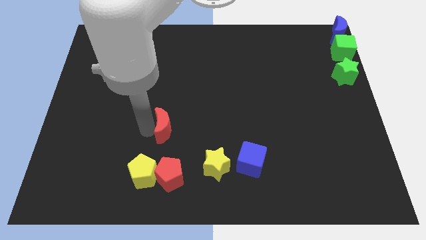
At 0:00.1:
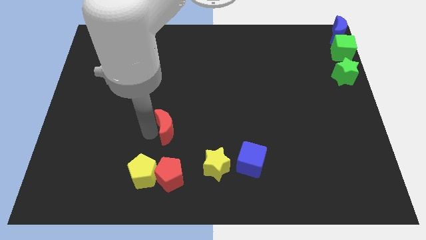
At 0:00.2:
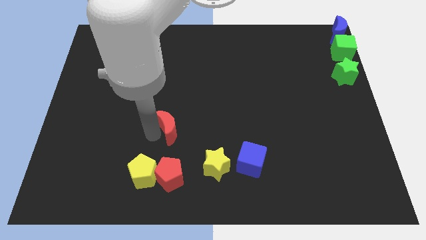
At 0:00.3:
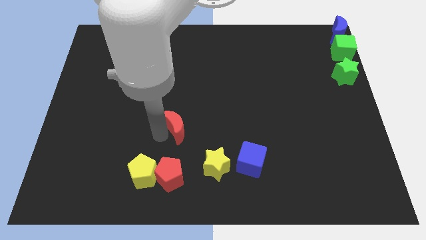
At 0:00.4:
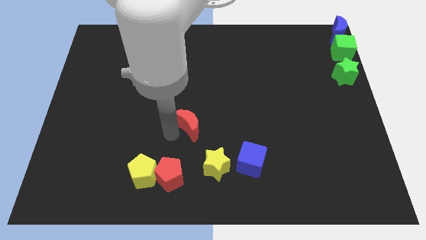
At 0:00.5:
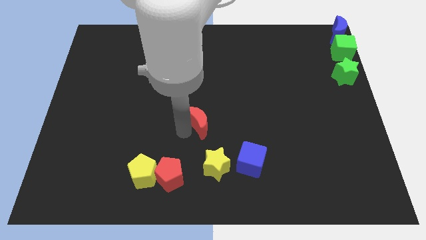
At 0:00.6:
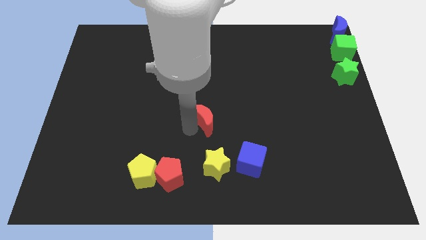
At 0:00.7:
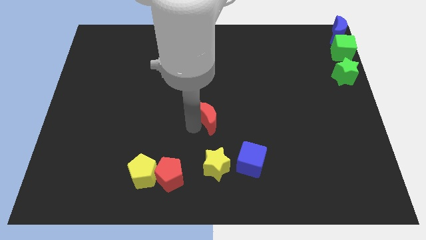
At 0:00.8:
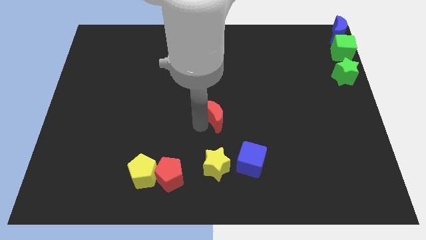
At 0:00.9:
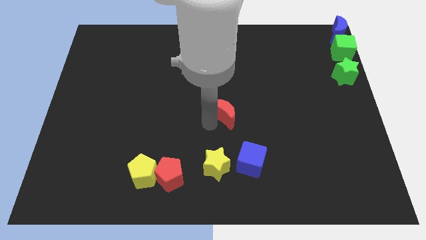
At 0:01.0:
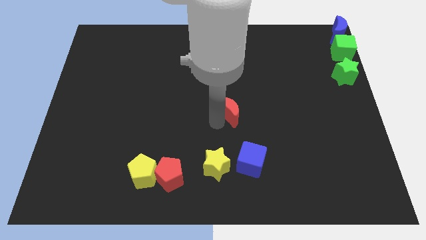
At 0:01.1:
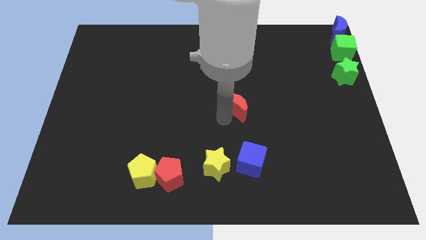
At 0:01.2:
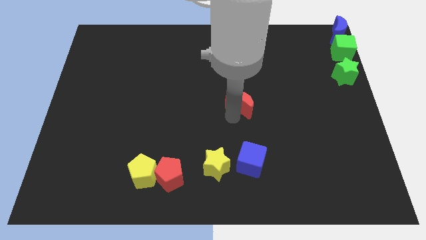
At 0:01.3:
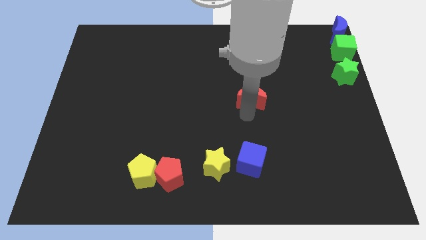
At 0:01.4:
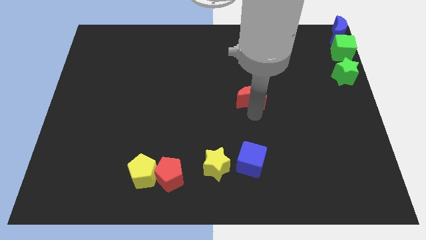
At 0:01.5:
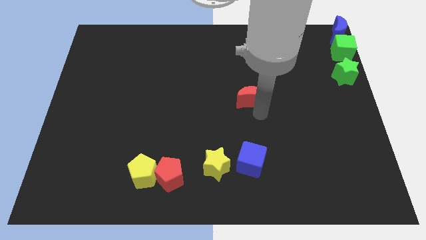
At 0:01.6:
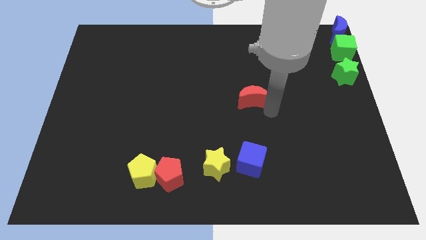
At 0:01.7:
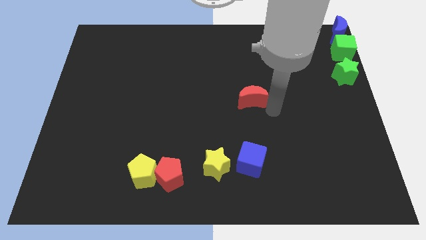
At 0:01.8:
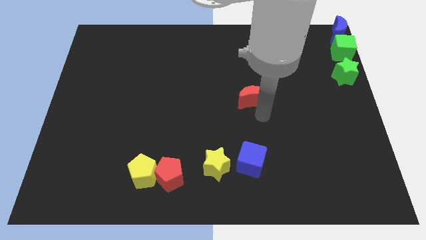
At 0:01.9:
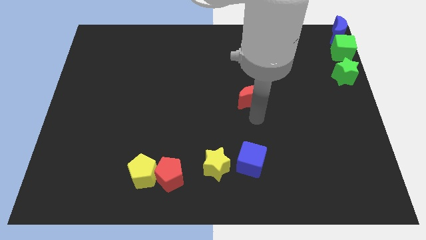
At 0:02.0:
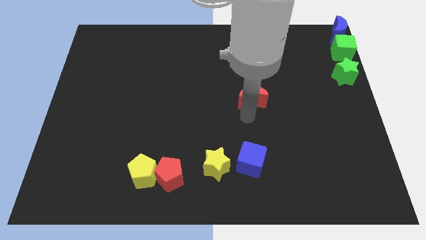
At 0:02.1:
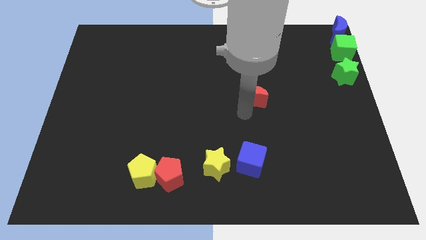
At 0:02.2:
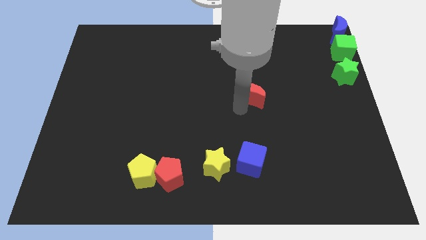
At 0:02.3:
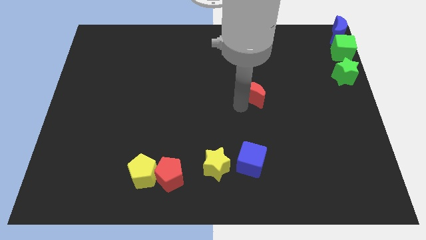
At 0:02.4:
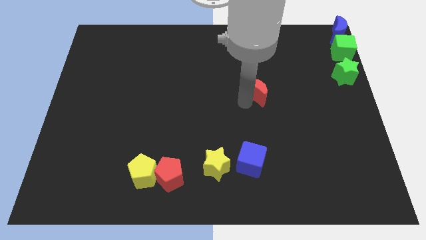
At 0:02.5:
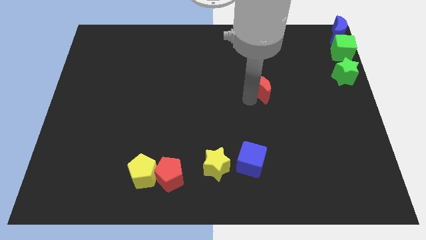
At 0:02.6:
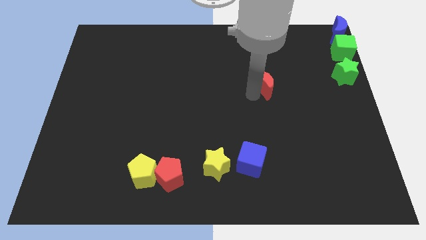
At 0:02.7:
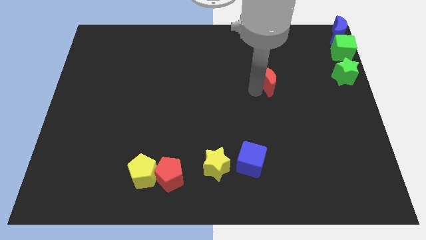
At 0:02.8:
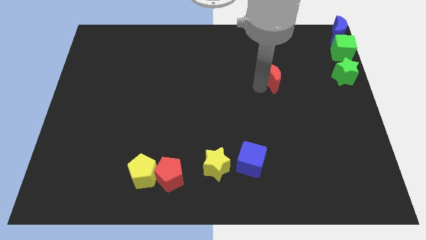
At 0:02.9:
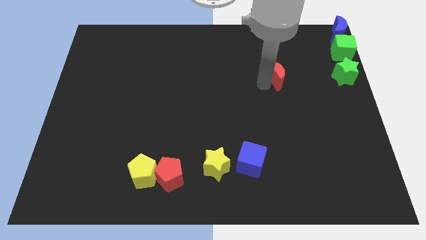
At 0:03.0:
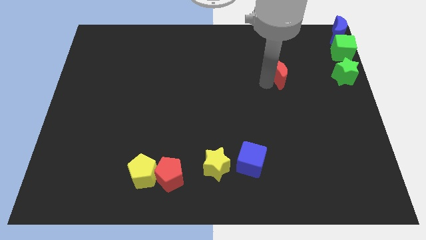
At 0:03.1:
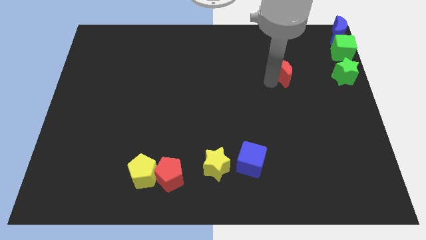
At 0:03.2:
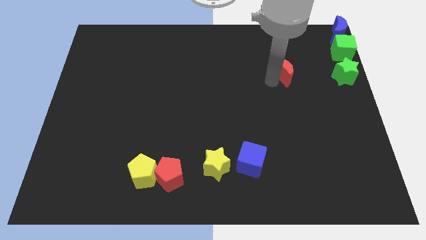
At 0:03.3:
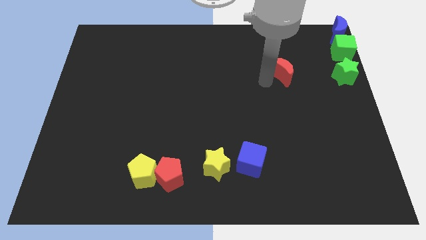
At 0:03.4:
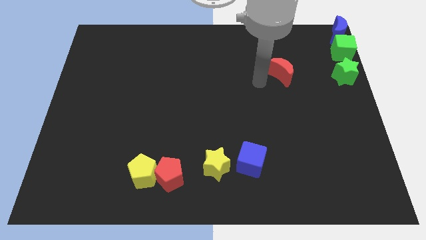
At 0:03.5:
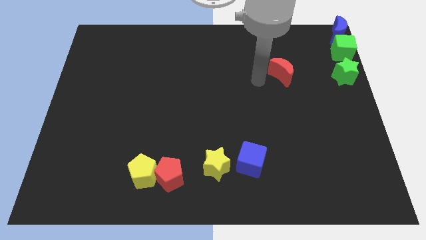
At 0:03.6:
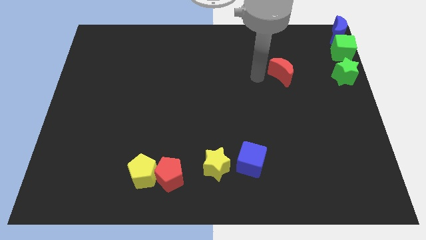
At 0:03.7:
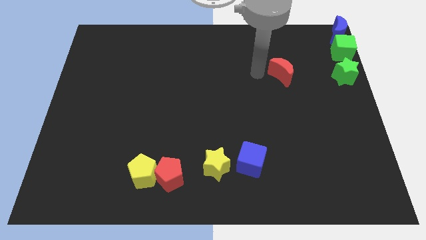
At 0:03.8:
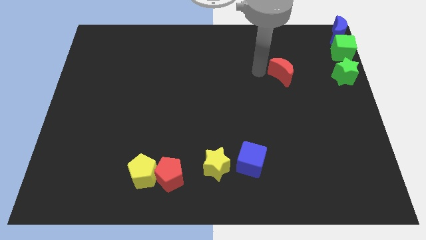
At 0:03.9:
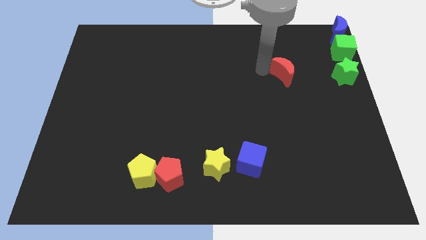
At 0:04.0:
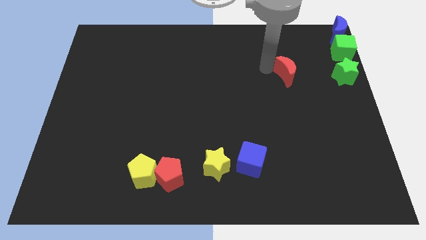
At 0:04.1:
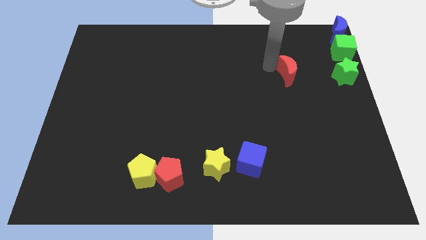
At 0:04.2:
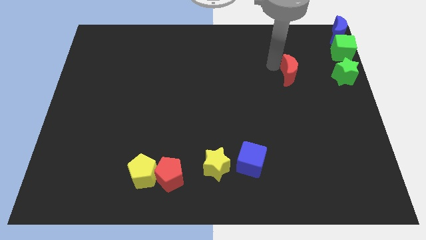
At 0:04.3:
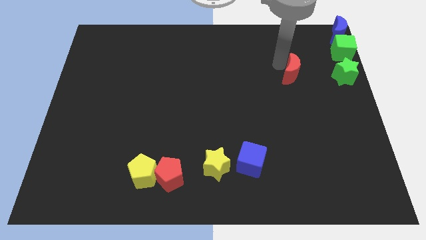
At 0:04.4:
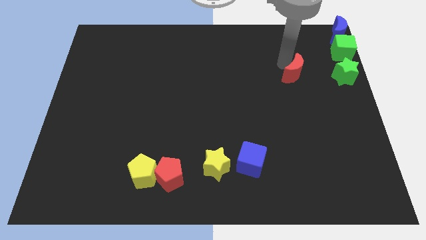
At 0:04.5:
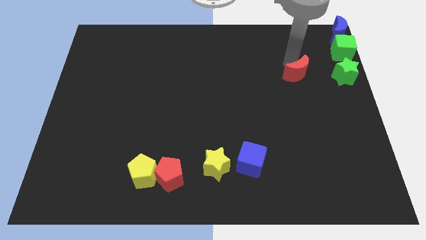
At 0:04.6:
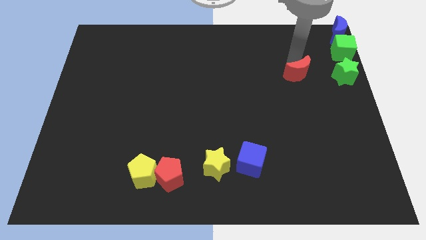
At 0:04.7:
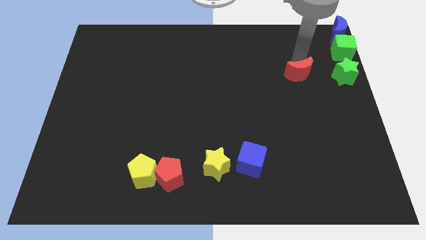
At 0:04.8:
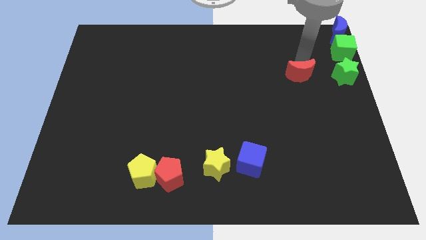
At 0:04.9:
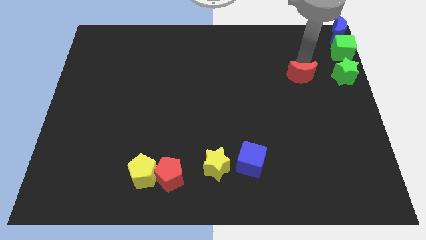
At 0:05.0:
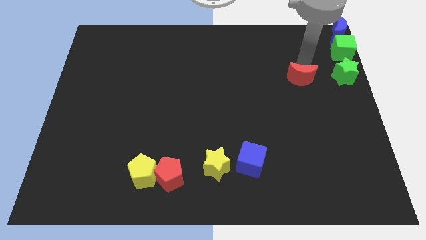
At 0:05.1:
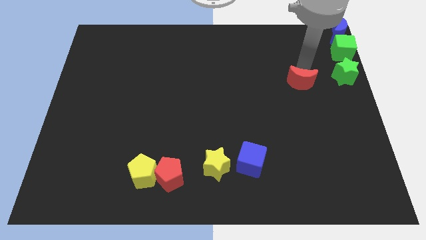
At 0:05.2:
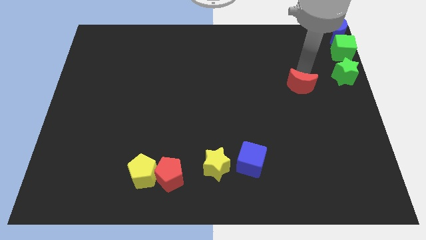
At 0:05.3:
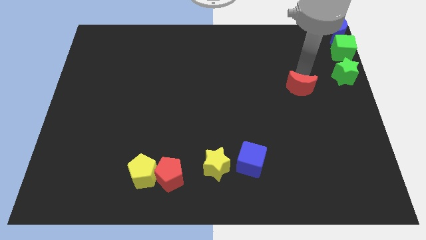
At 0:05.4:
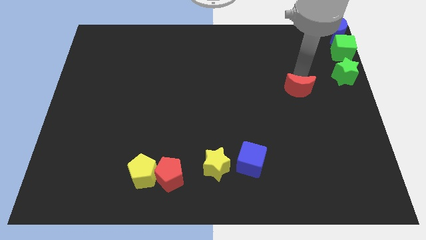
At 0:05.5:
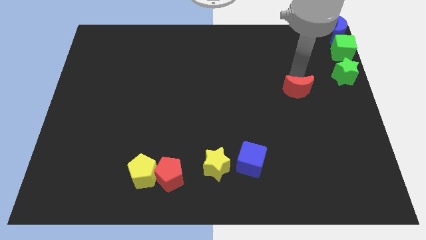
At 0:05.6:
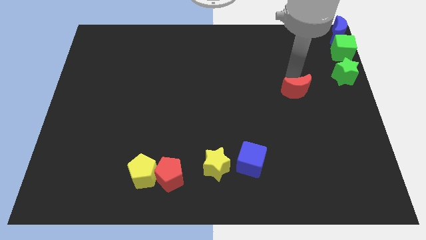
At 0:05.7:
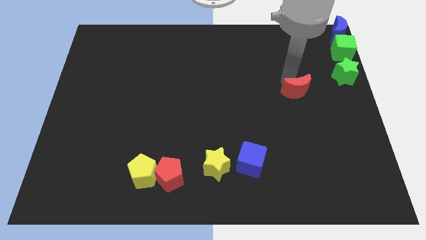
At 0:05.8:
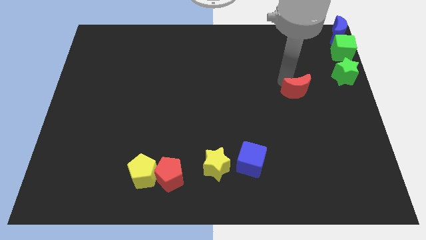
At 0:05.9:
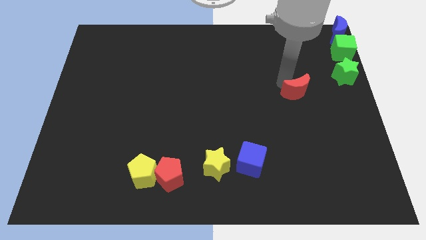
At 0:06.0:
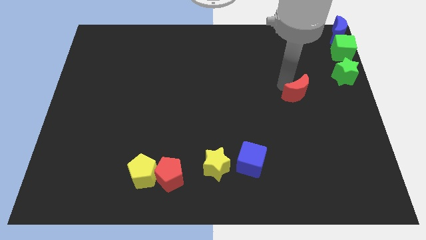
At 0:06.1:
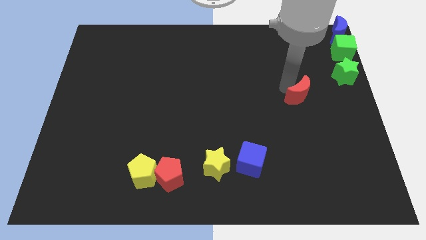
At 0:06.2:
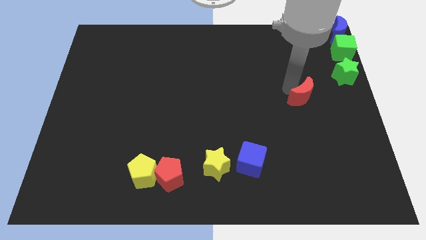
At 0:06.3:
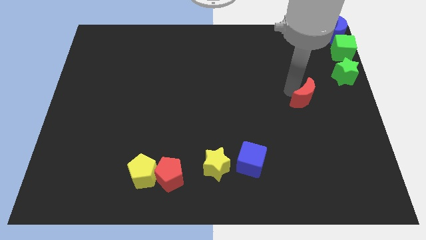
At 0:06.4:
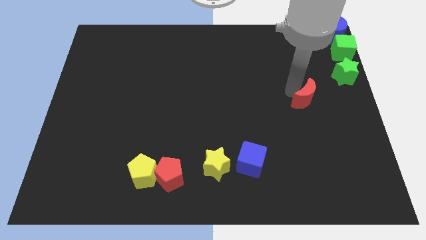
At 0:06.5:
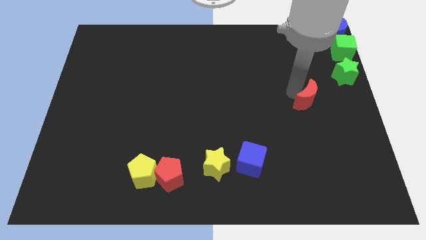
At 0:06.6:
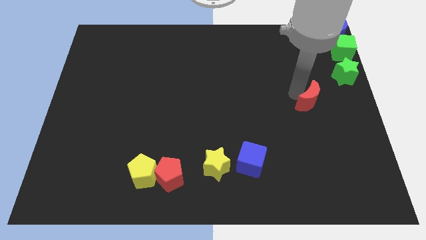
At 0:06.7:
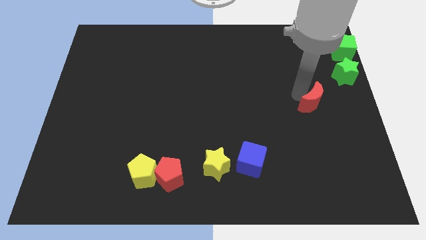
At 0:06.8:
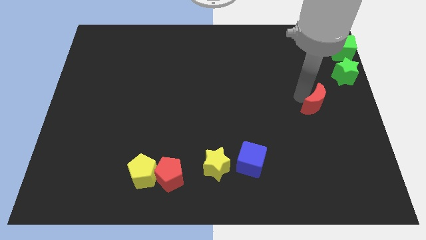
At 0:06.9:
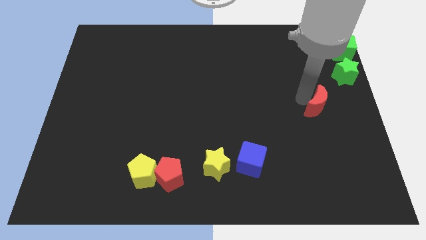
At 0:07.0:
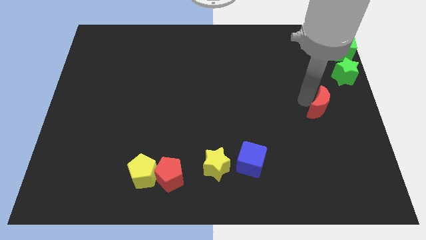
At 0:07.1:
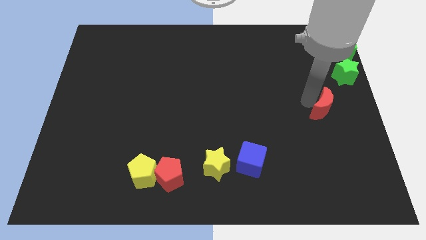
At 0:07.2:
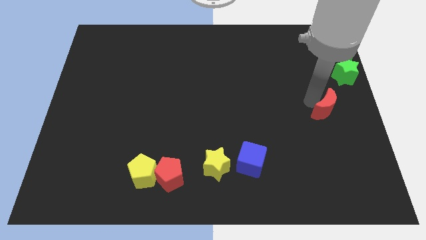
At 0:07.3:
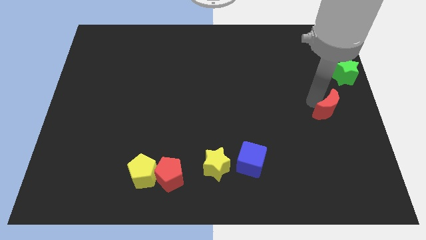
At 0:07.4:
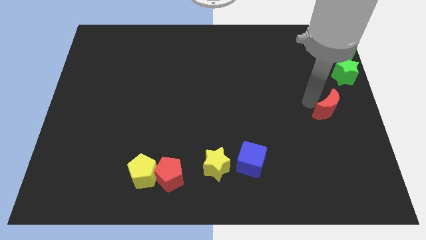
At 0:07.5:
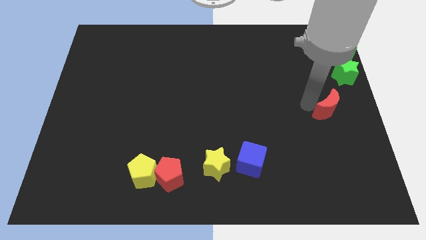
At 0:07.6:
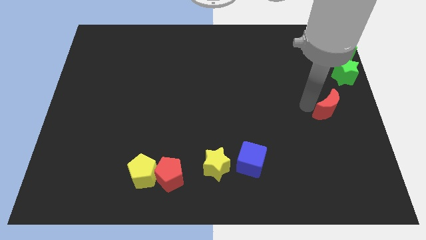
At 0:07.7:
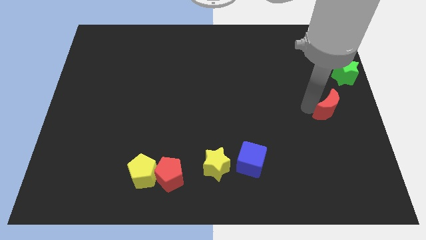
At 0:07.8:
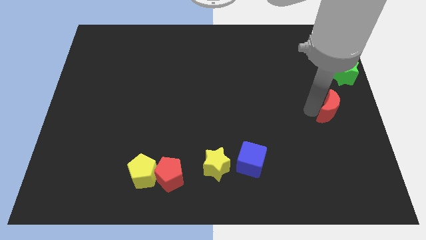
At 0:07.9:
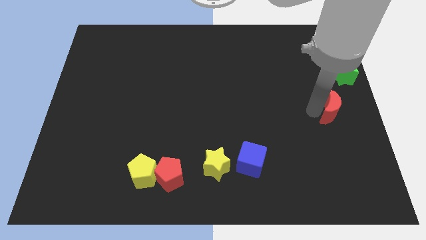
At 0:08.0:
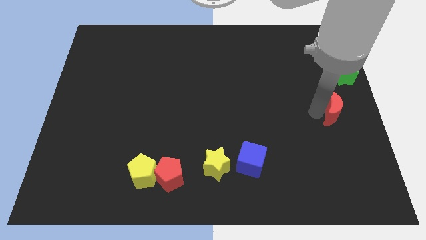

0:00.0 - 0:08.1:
push the red moon to the center right

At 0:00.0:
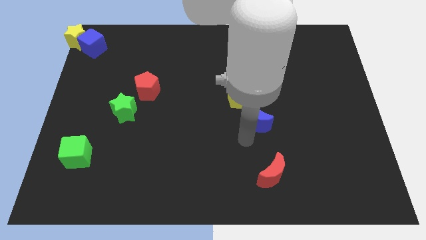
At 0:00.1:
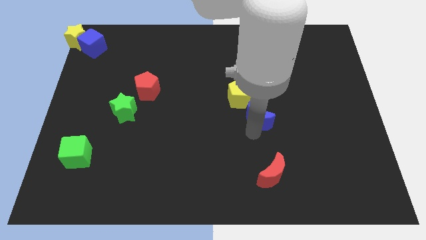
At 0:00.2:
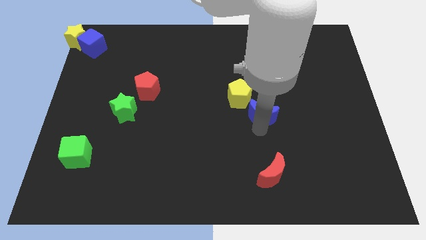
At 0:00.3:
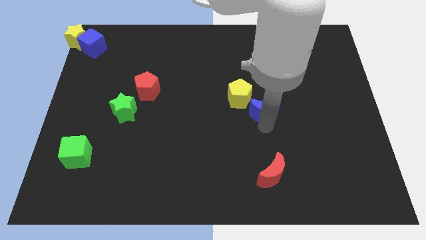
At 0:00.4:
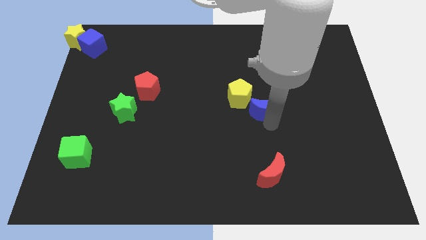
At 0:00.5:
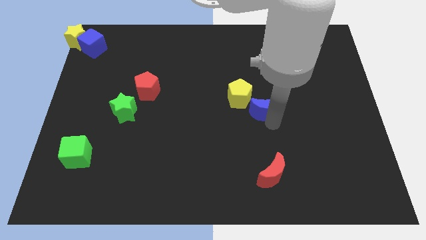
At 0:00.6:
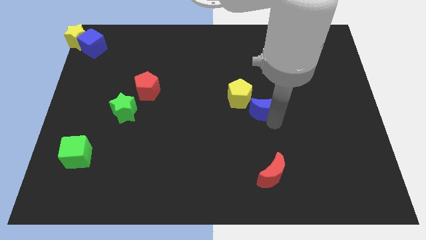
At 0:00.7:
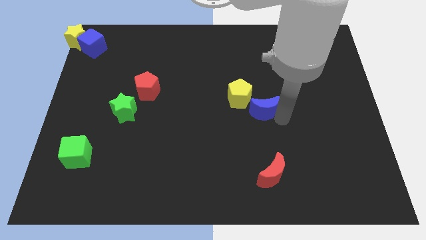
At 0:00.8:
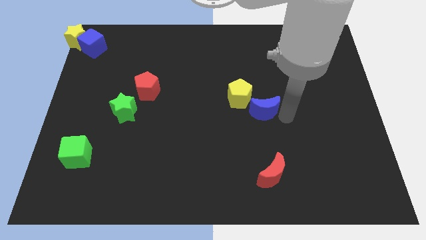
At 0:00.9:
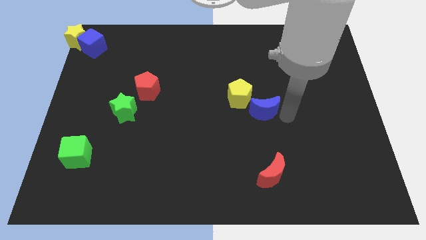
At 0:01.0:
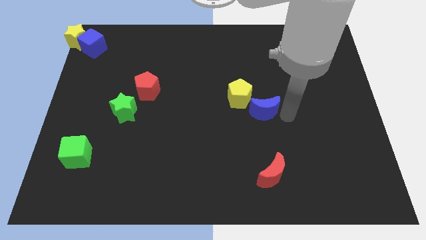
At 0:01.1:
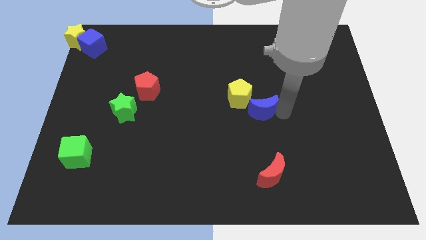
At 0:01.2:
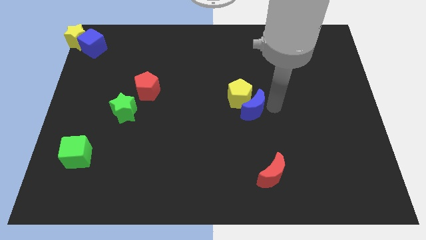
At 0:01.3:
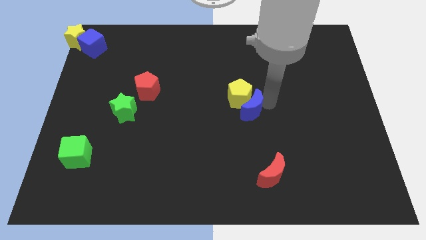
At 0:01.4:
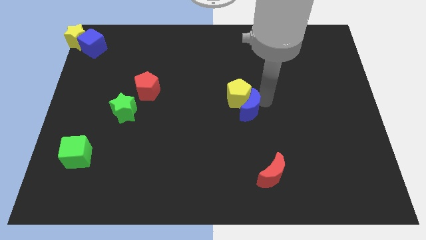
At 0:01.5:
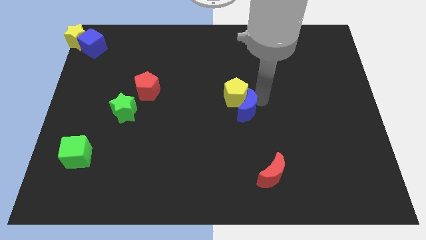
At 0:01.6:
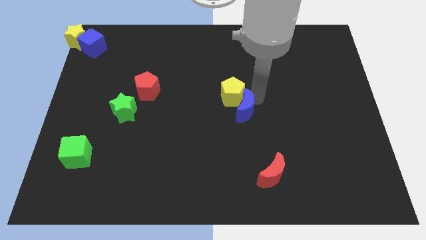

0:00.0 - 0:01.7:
place blue crescent to the right bottom of yellow pentagon
